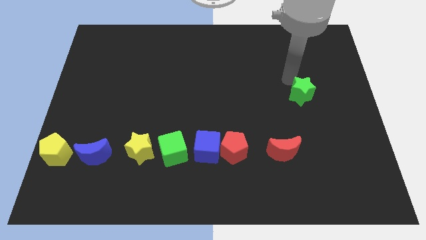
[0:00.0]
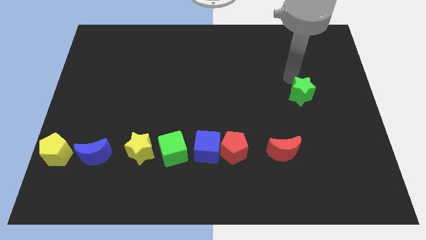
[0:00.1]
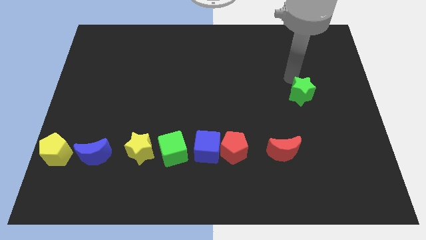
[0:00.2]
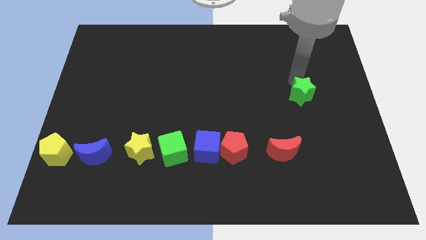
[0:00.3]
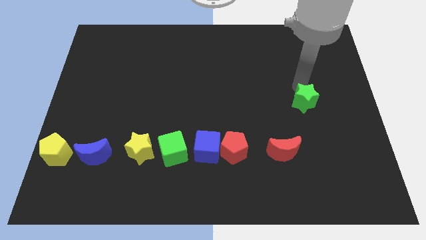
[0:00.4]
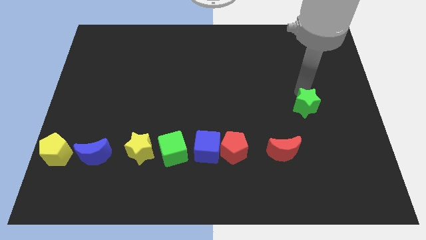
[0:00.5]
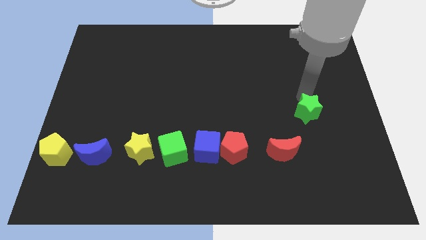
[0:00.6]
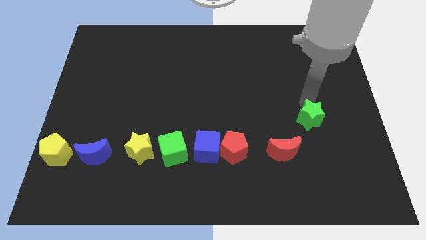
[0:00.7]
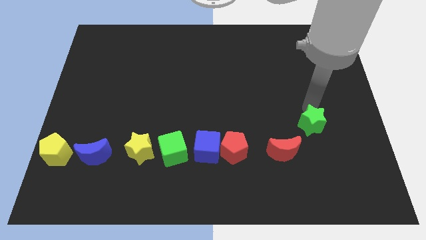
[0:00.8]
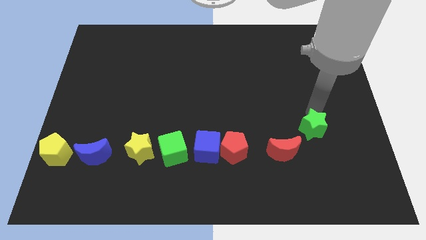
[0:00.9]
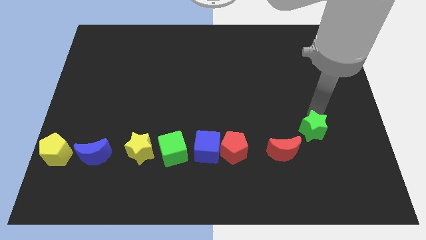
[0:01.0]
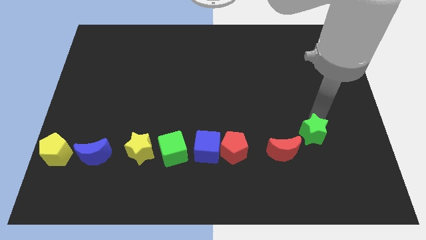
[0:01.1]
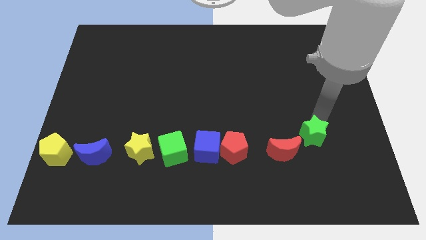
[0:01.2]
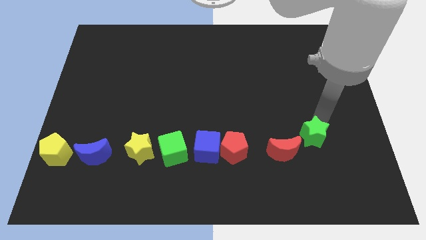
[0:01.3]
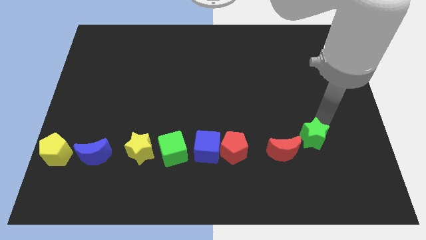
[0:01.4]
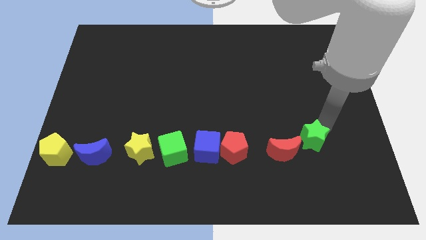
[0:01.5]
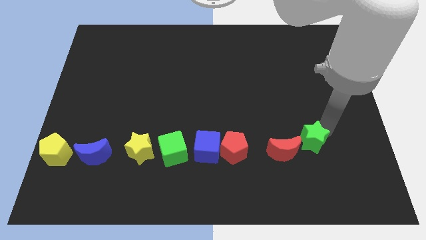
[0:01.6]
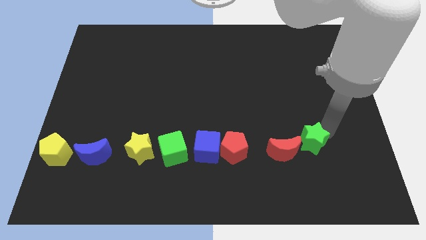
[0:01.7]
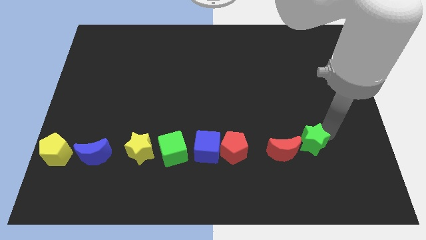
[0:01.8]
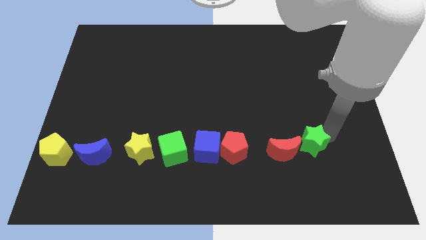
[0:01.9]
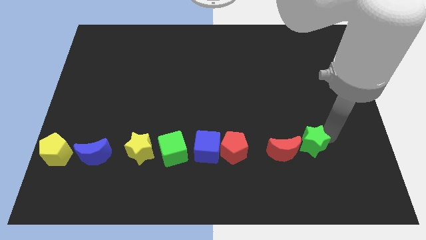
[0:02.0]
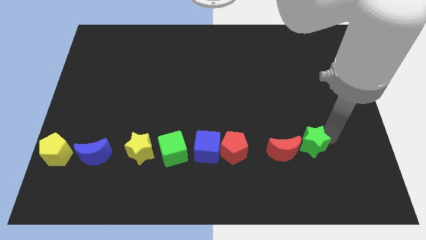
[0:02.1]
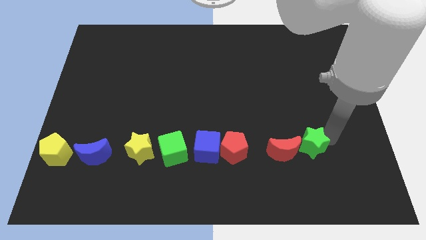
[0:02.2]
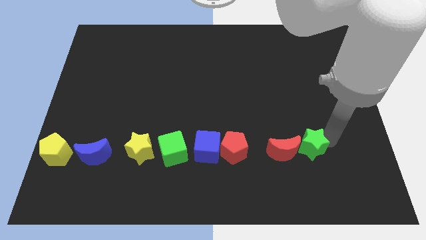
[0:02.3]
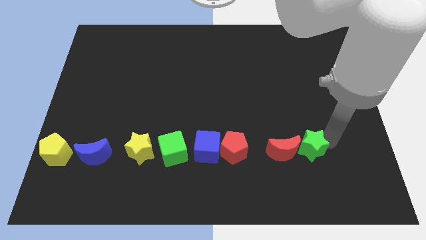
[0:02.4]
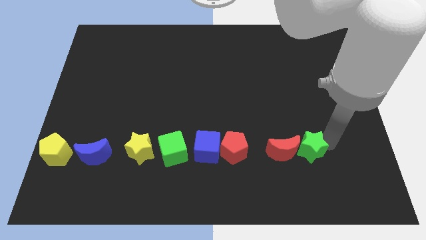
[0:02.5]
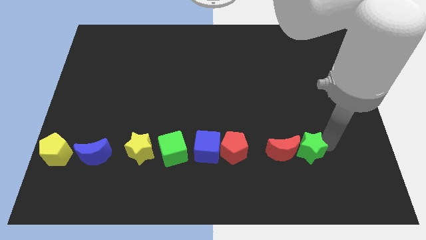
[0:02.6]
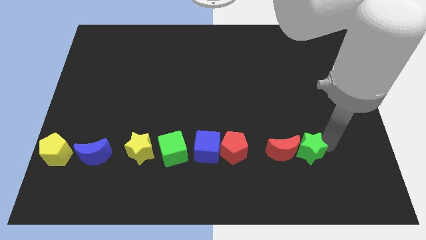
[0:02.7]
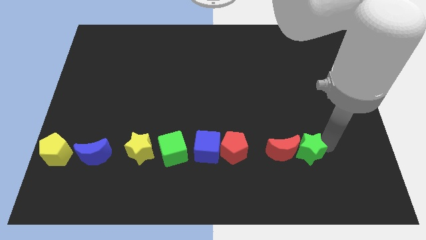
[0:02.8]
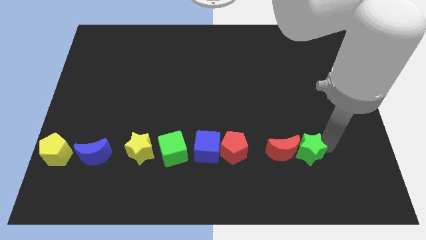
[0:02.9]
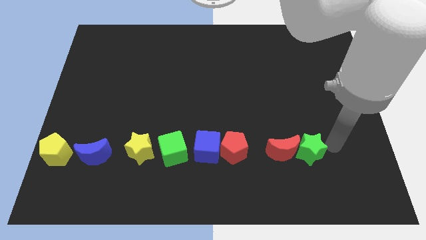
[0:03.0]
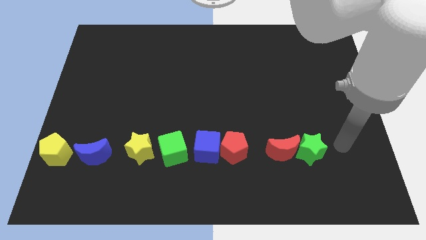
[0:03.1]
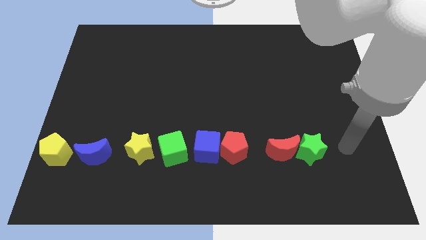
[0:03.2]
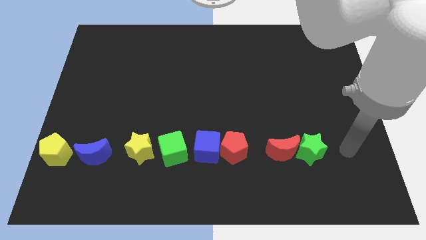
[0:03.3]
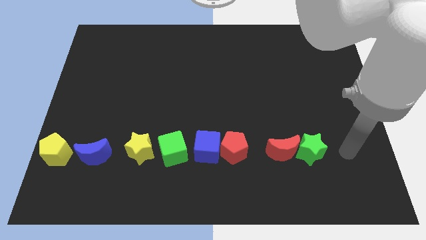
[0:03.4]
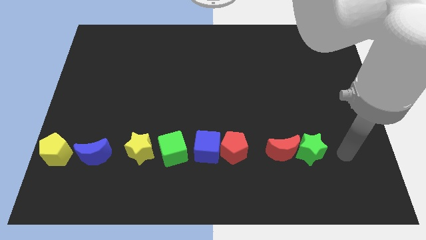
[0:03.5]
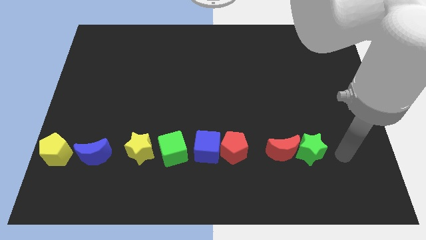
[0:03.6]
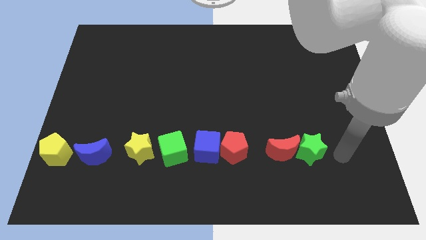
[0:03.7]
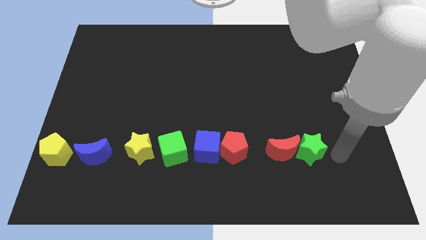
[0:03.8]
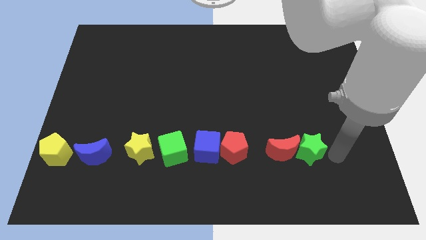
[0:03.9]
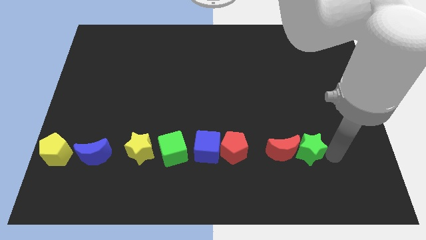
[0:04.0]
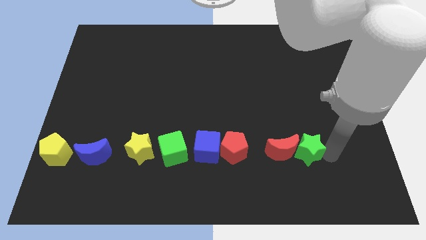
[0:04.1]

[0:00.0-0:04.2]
slide the green star and red moon

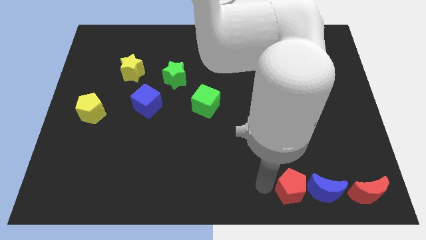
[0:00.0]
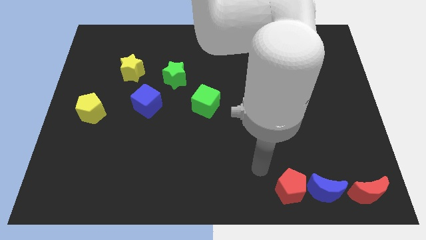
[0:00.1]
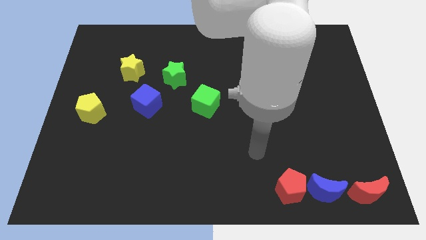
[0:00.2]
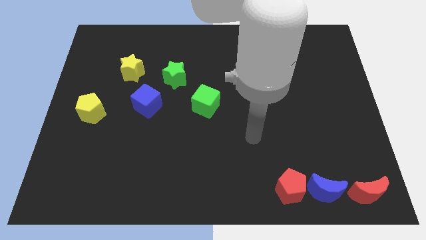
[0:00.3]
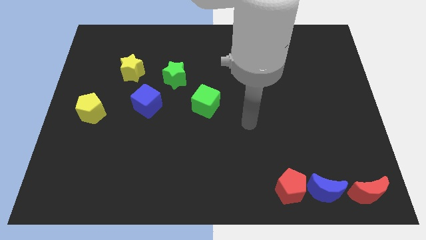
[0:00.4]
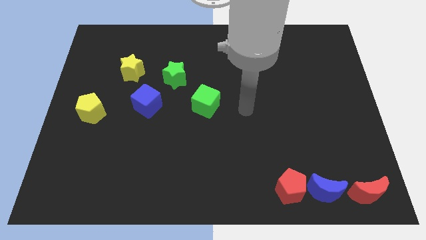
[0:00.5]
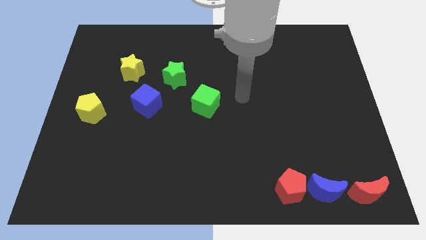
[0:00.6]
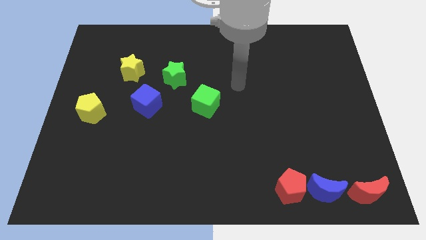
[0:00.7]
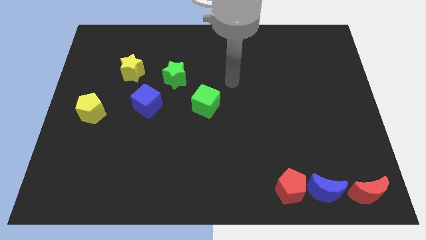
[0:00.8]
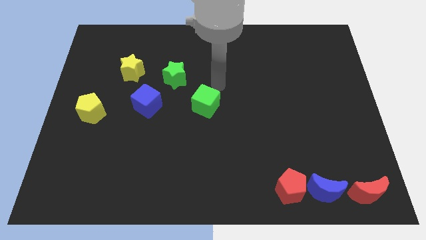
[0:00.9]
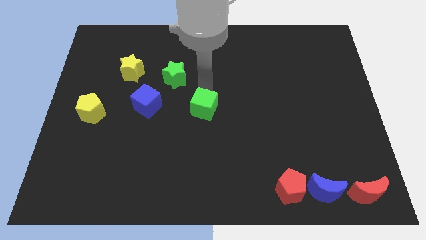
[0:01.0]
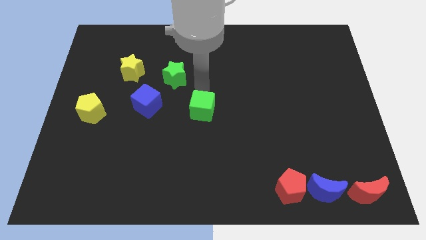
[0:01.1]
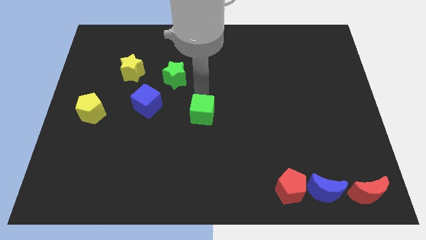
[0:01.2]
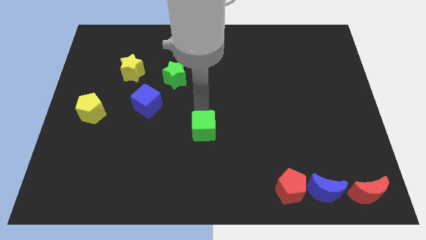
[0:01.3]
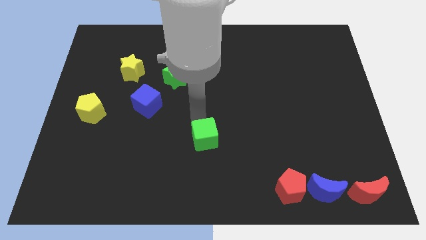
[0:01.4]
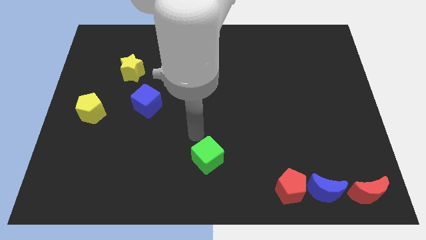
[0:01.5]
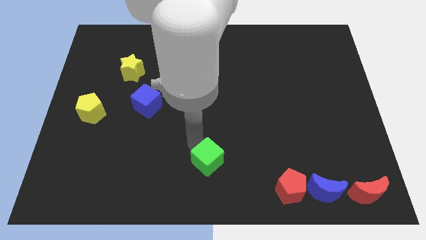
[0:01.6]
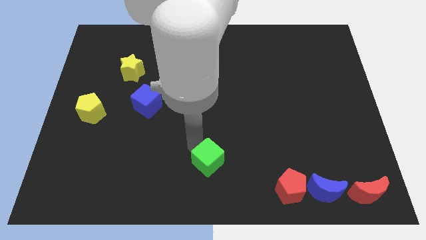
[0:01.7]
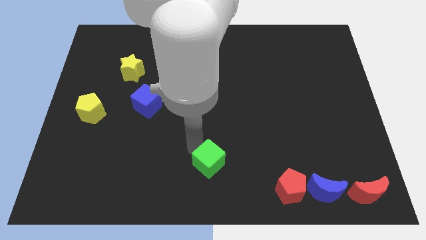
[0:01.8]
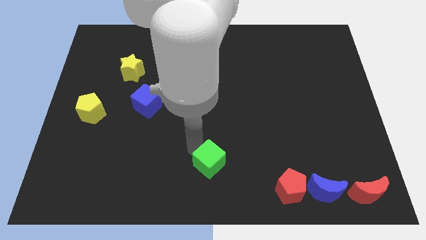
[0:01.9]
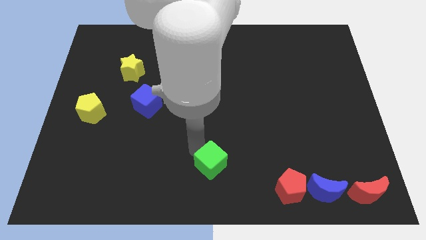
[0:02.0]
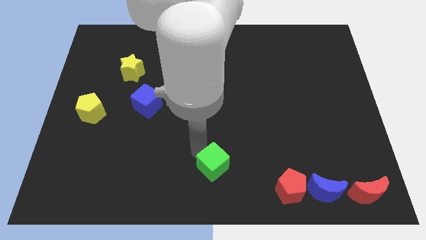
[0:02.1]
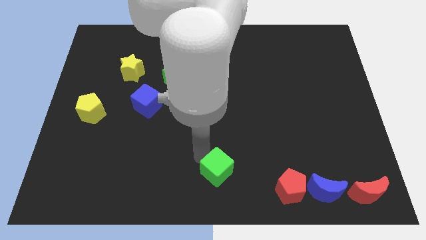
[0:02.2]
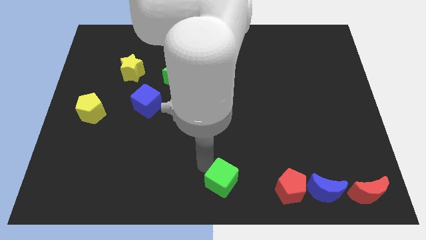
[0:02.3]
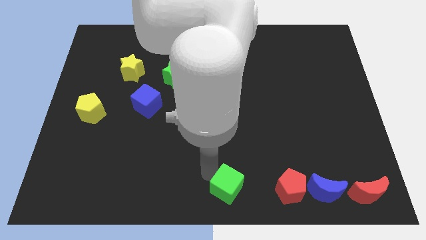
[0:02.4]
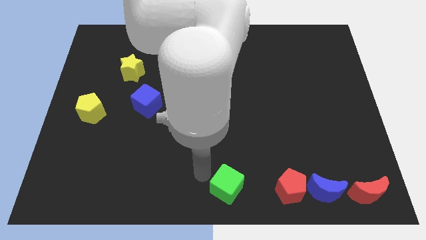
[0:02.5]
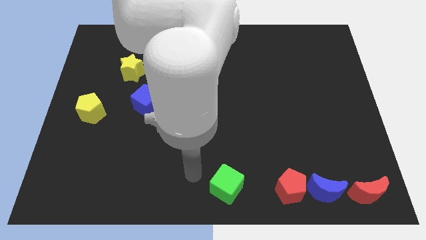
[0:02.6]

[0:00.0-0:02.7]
push the green cube at the bottom center of the board

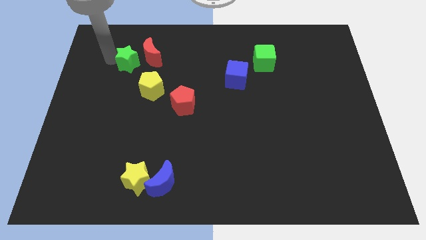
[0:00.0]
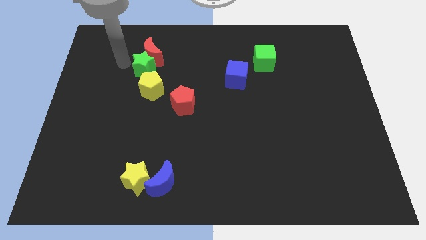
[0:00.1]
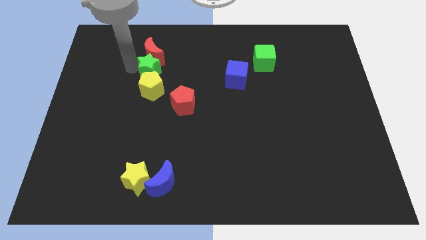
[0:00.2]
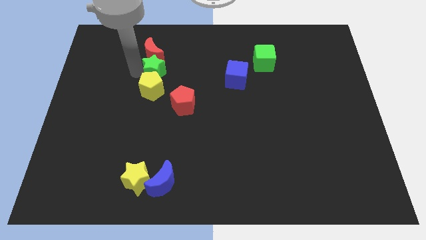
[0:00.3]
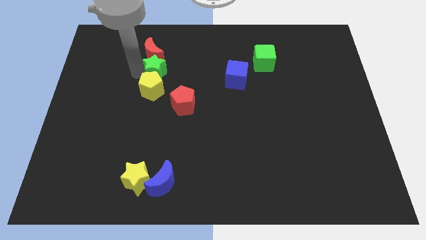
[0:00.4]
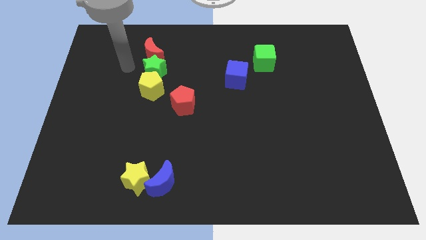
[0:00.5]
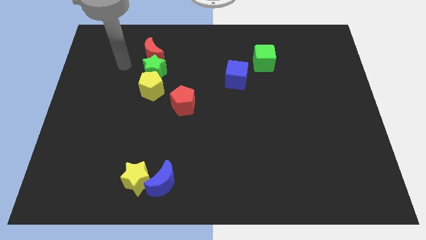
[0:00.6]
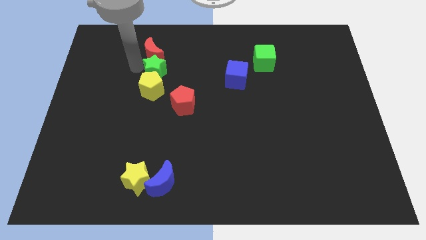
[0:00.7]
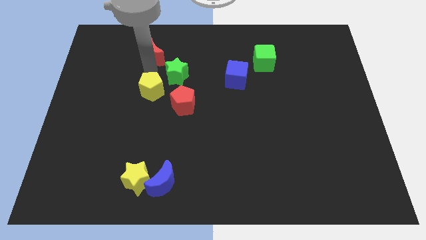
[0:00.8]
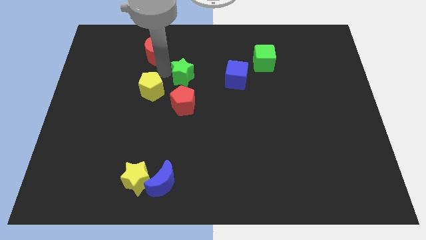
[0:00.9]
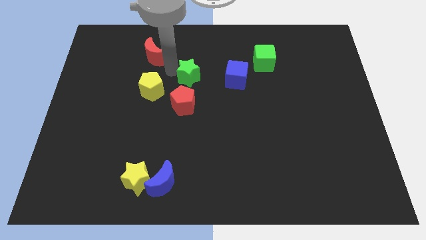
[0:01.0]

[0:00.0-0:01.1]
move green star towards blue cube

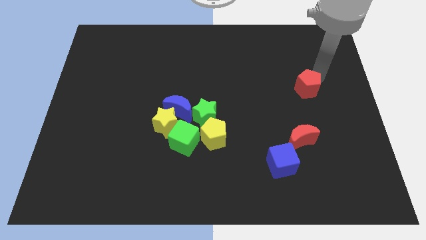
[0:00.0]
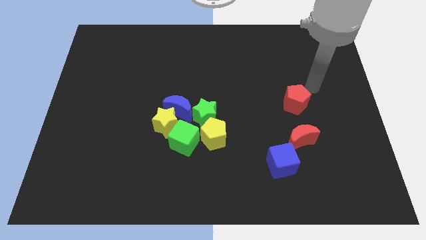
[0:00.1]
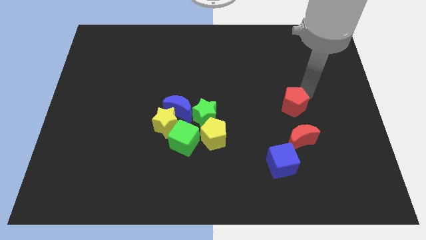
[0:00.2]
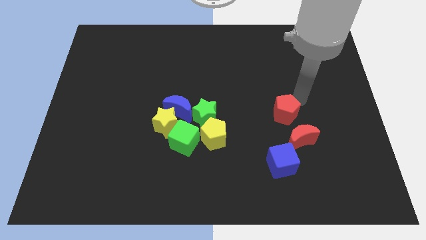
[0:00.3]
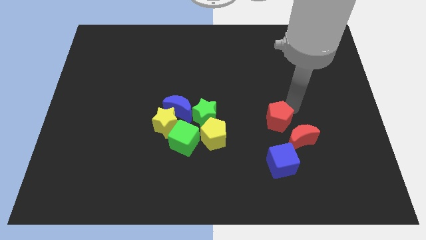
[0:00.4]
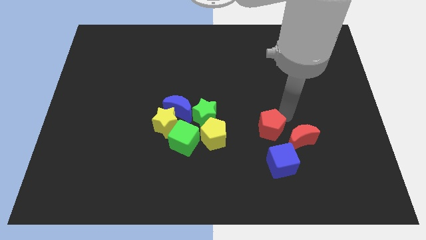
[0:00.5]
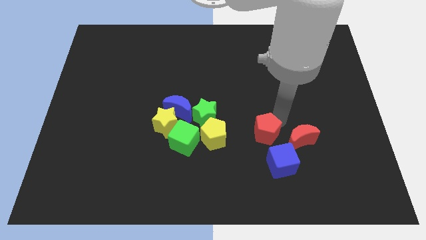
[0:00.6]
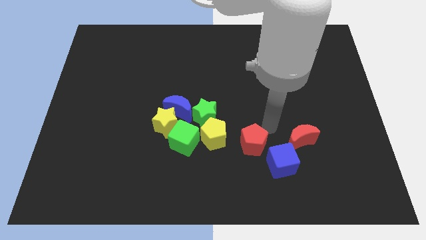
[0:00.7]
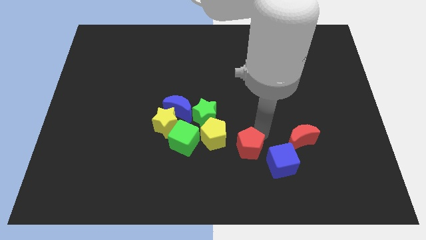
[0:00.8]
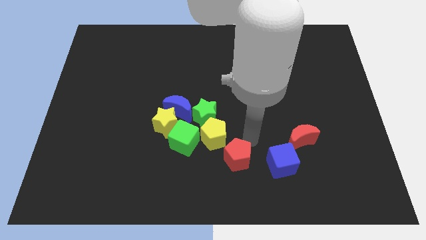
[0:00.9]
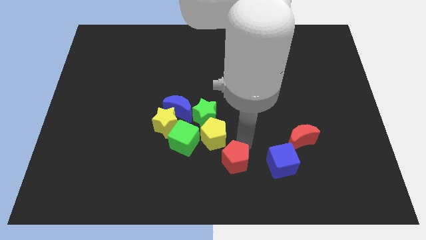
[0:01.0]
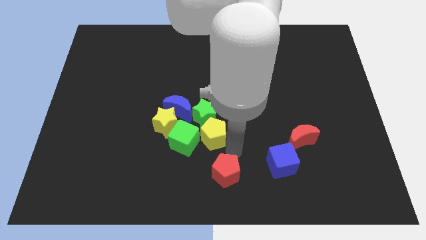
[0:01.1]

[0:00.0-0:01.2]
place the red pentagon parallel to the blue cube
